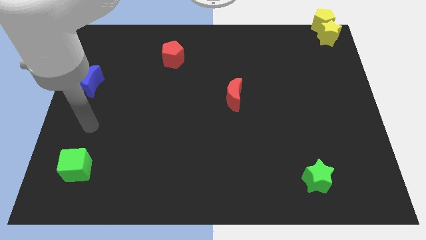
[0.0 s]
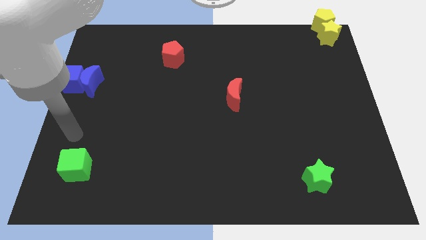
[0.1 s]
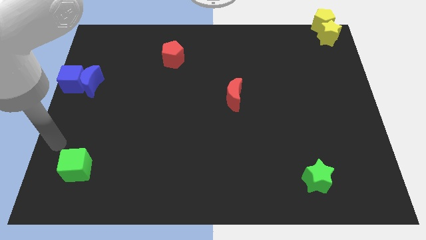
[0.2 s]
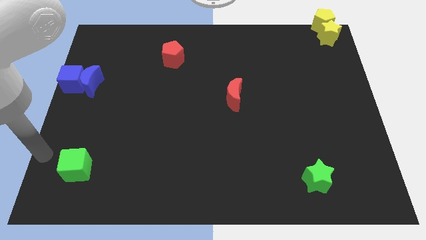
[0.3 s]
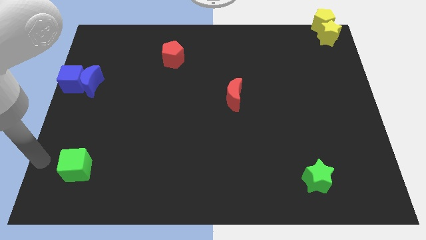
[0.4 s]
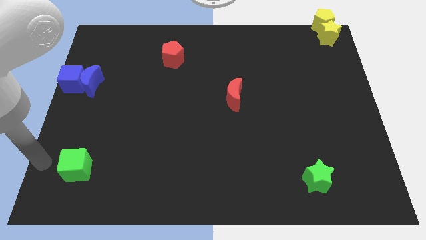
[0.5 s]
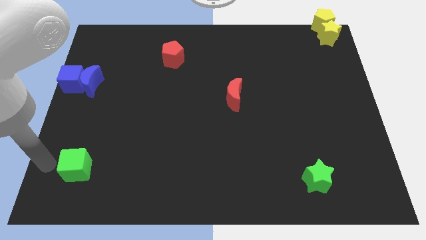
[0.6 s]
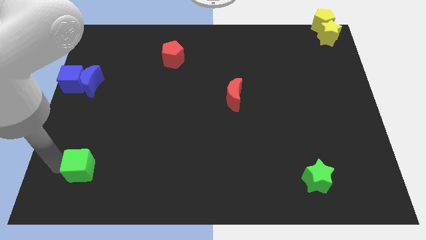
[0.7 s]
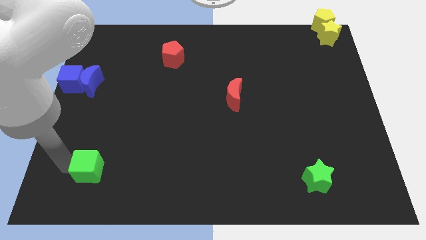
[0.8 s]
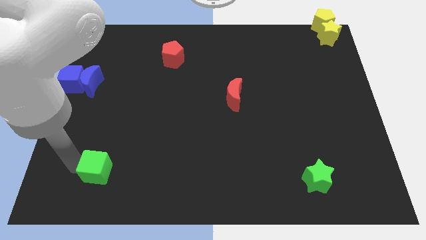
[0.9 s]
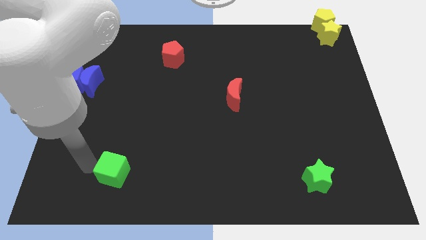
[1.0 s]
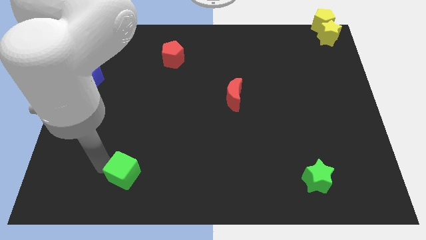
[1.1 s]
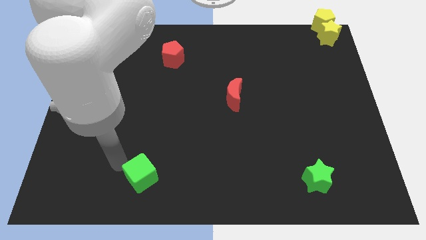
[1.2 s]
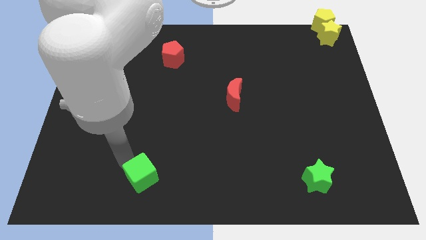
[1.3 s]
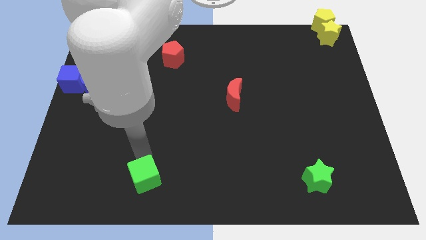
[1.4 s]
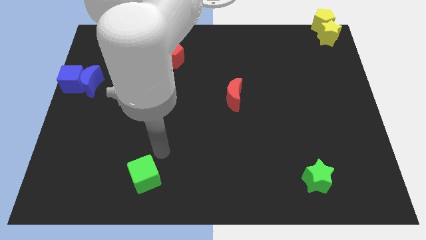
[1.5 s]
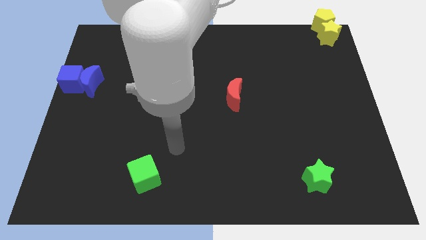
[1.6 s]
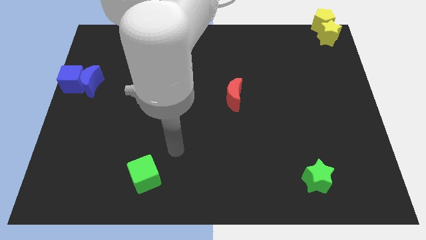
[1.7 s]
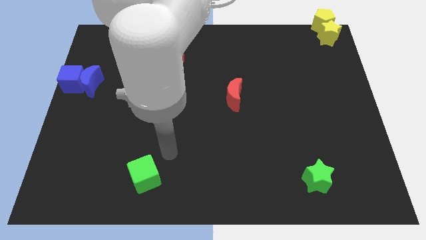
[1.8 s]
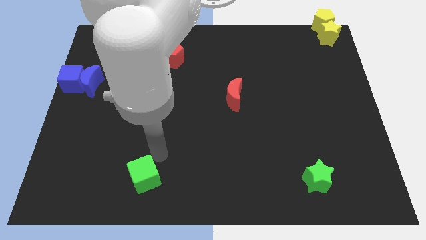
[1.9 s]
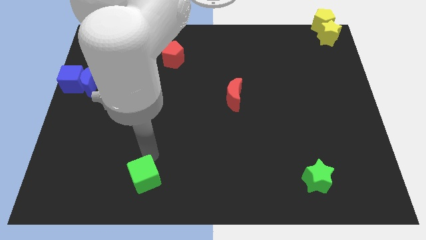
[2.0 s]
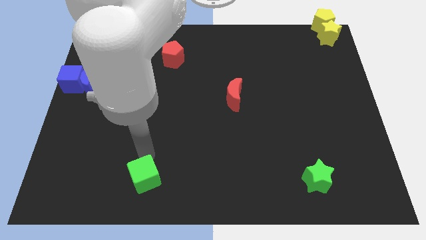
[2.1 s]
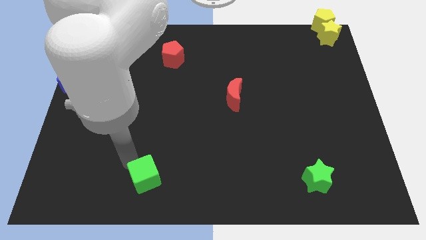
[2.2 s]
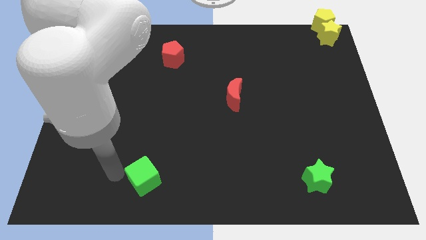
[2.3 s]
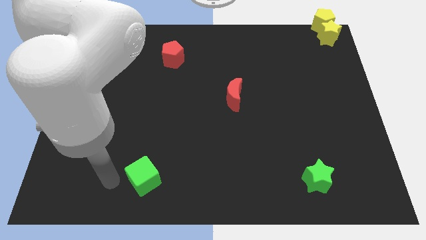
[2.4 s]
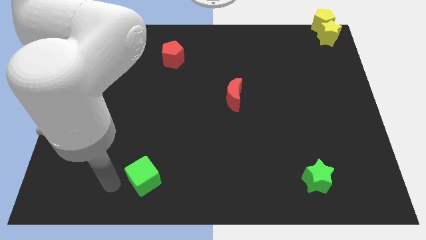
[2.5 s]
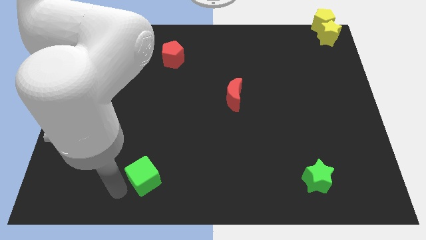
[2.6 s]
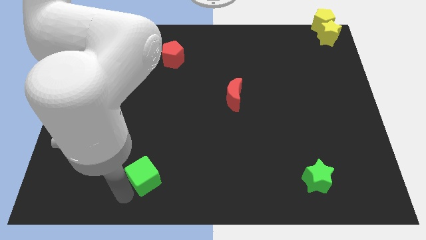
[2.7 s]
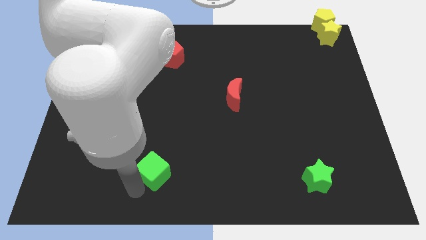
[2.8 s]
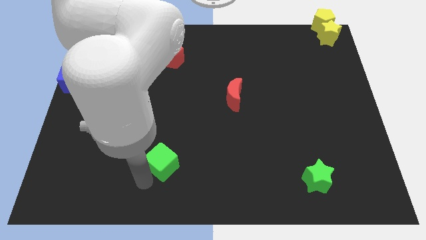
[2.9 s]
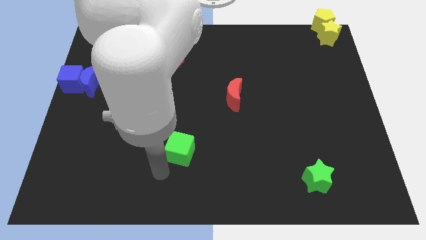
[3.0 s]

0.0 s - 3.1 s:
slide the green cube vertical to the red pentagon

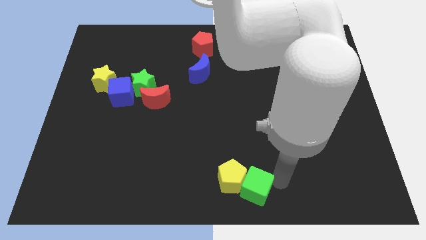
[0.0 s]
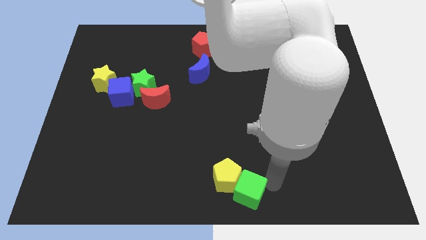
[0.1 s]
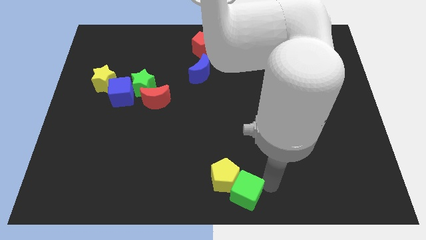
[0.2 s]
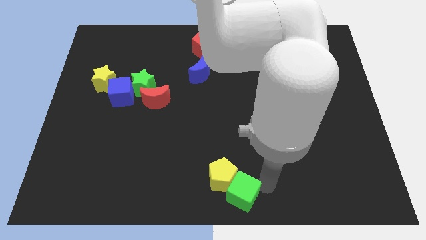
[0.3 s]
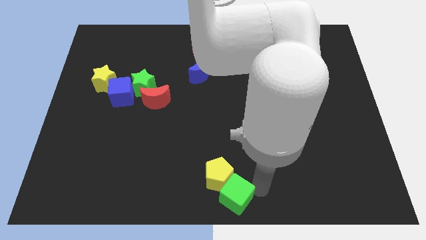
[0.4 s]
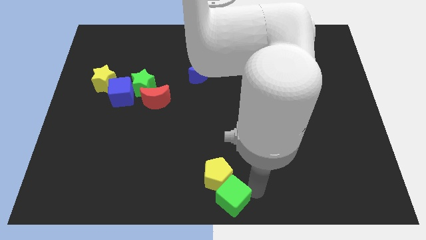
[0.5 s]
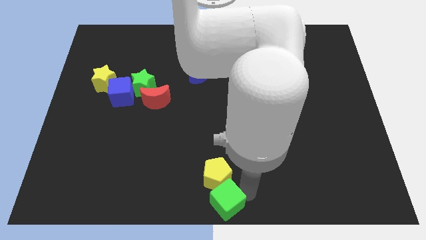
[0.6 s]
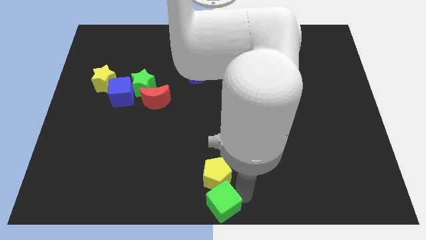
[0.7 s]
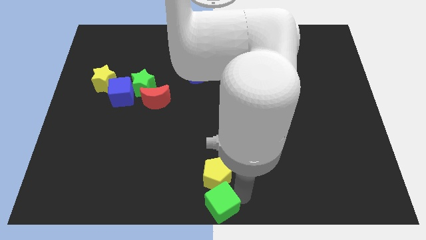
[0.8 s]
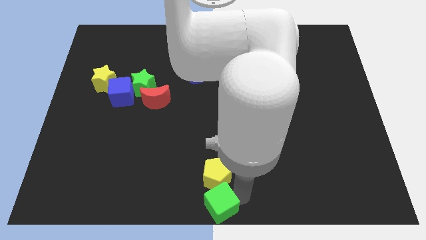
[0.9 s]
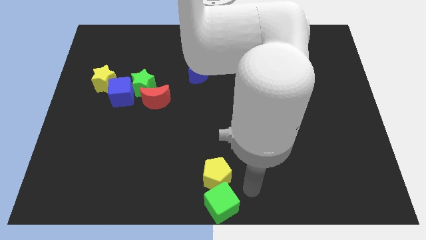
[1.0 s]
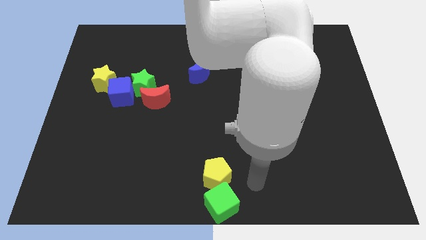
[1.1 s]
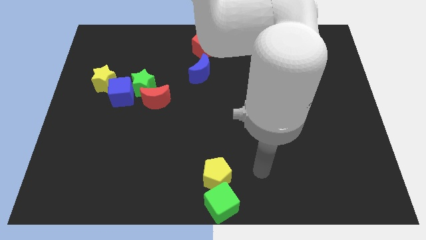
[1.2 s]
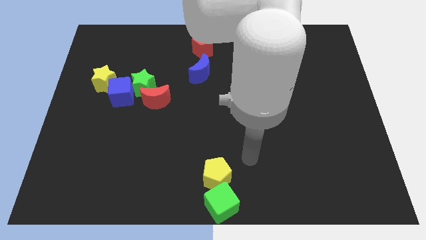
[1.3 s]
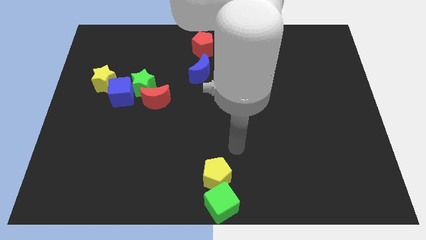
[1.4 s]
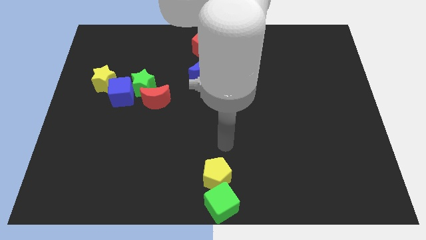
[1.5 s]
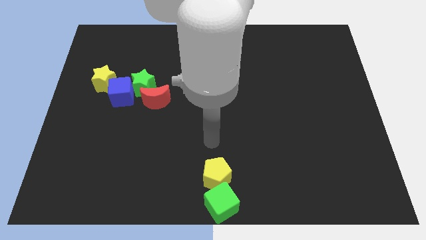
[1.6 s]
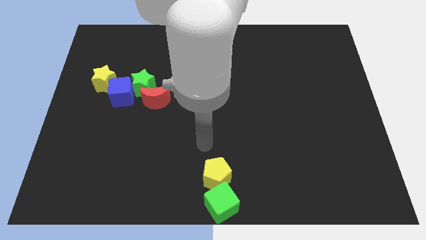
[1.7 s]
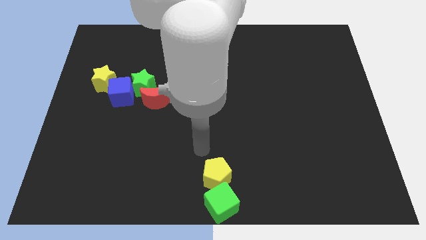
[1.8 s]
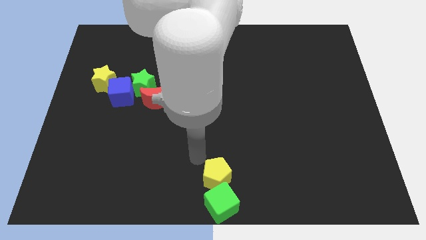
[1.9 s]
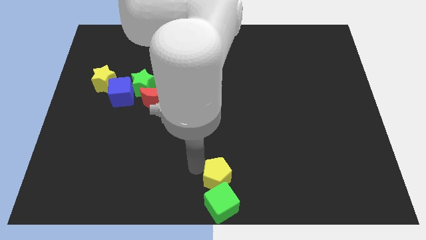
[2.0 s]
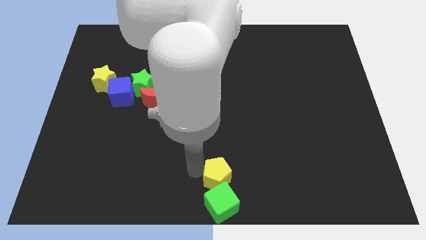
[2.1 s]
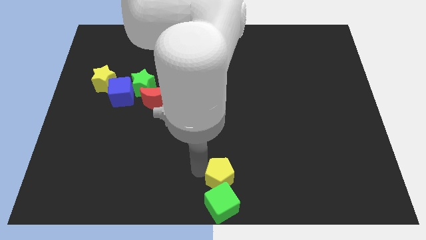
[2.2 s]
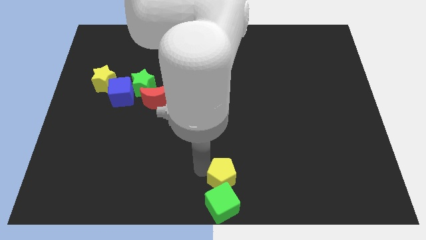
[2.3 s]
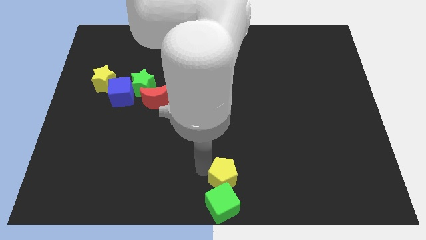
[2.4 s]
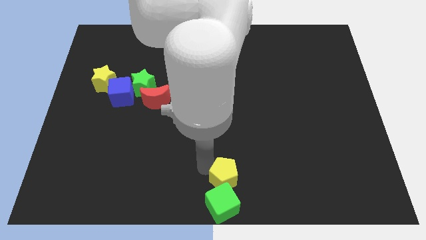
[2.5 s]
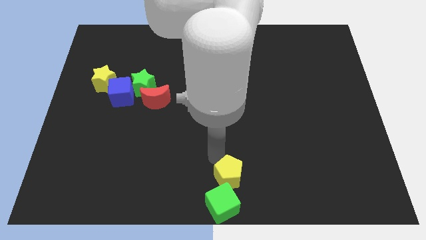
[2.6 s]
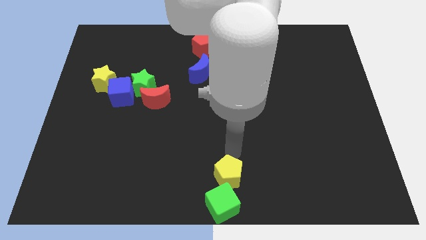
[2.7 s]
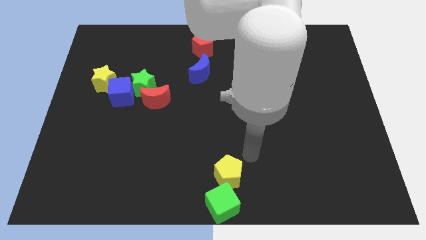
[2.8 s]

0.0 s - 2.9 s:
push the green cube and yellow pentagon to the center bottom of the board

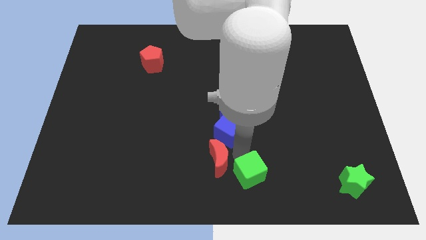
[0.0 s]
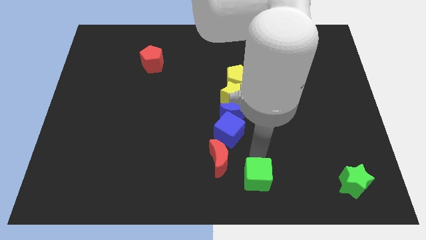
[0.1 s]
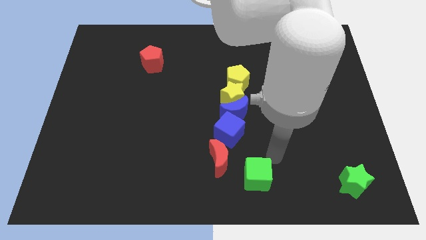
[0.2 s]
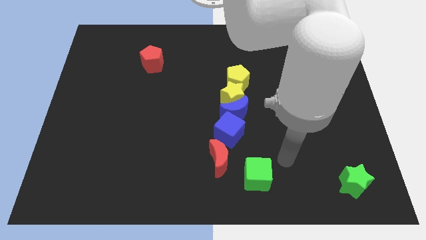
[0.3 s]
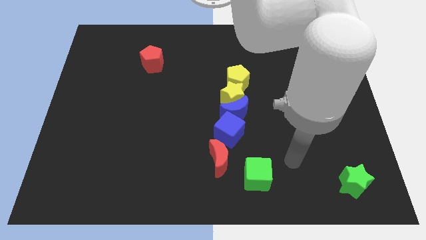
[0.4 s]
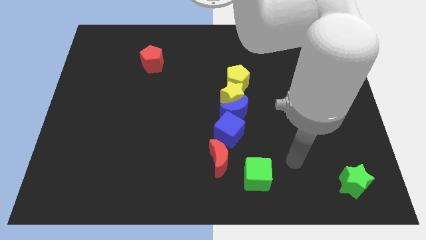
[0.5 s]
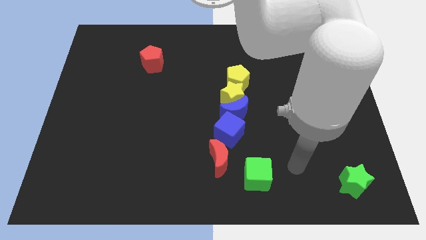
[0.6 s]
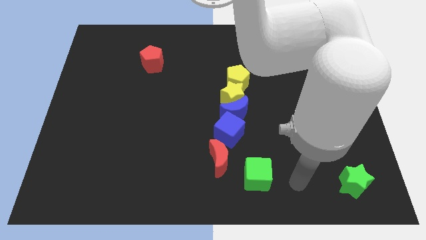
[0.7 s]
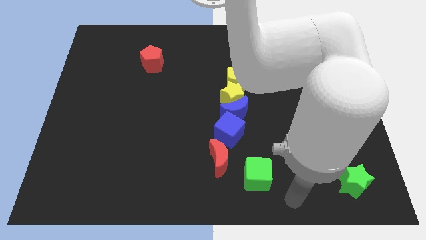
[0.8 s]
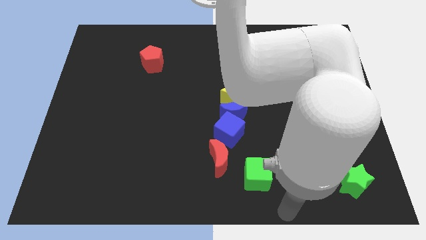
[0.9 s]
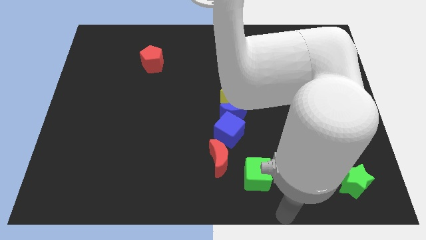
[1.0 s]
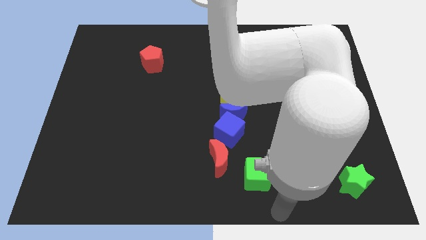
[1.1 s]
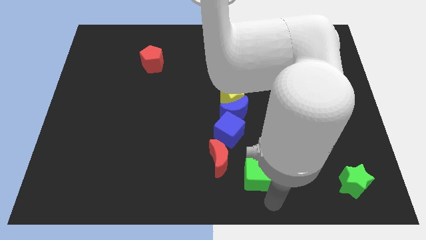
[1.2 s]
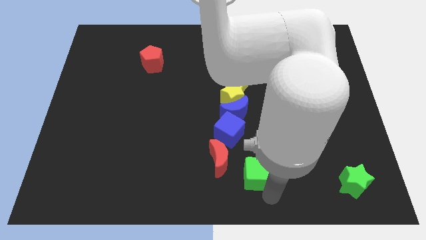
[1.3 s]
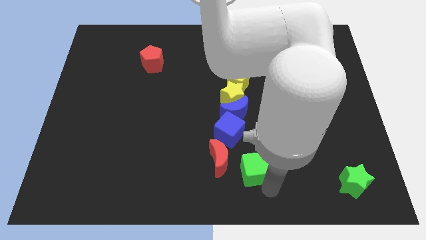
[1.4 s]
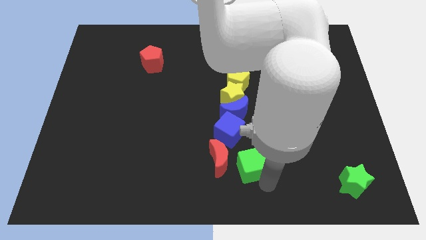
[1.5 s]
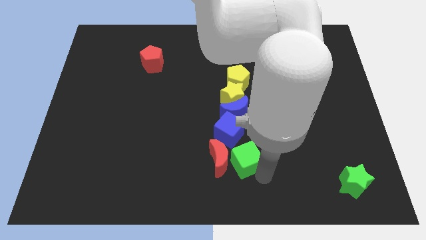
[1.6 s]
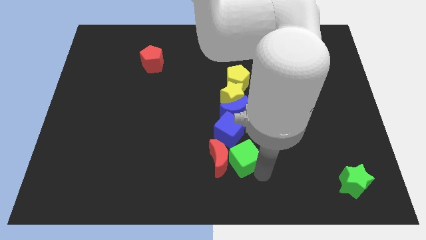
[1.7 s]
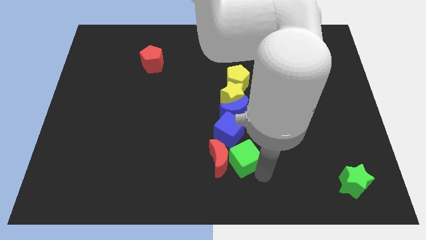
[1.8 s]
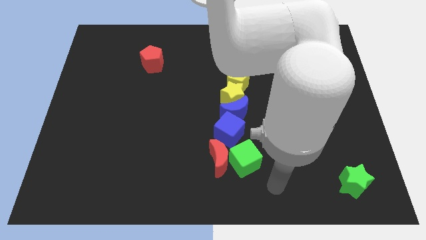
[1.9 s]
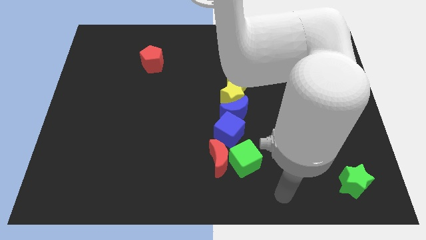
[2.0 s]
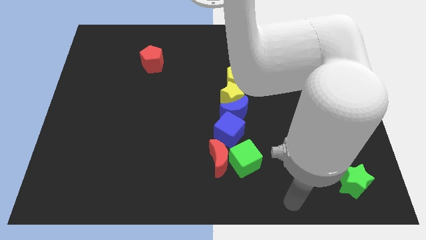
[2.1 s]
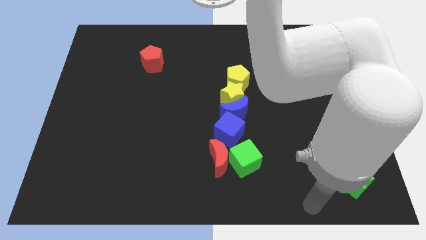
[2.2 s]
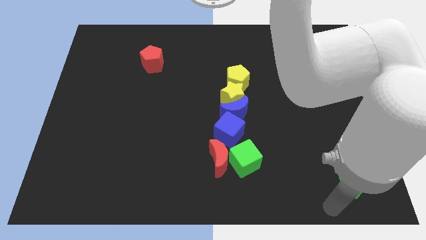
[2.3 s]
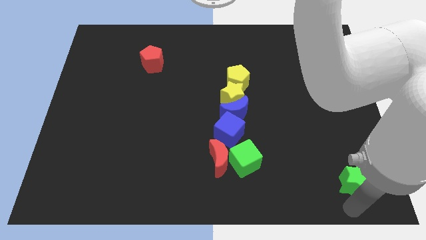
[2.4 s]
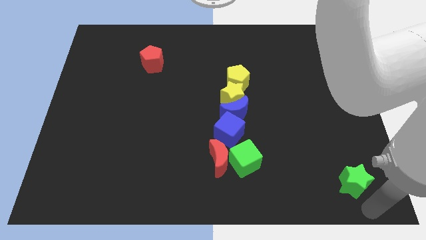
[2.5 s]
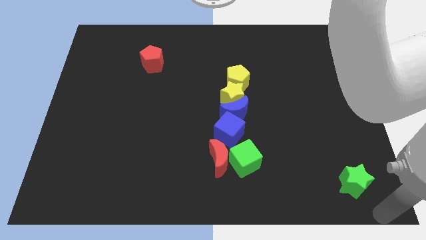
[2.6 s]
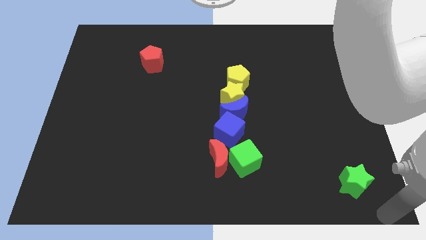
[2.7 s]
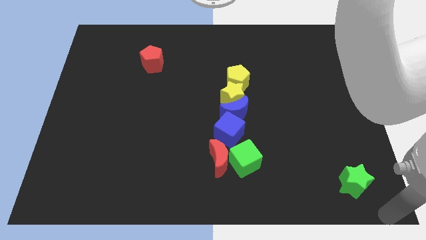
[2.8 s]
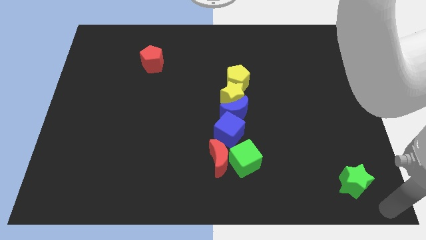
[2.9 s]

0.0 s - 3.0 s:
push the green cube into the red moon and move away
